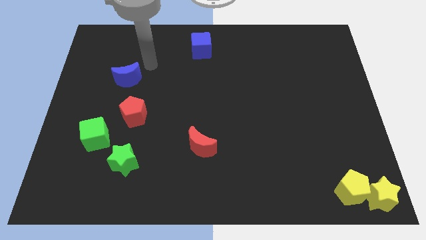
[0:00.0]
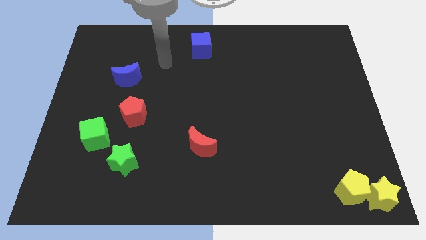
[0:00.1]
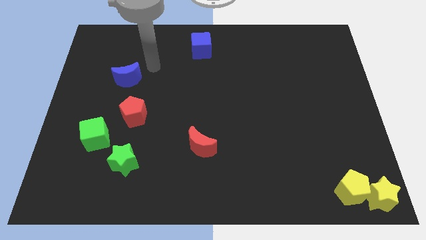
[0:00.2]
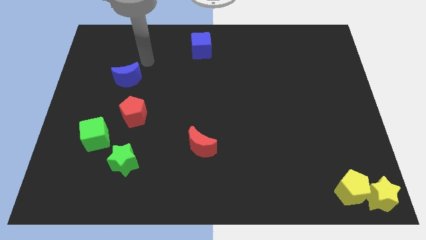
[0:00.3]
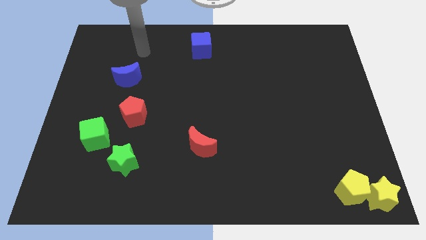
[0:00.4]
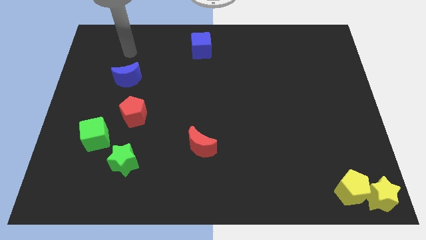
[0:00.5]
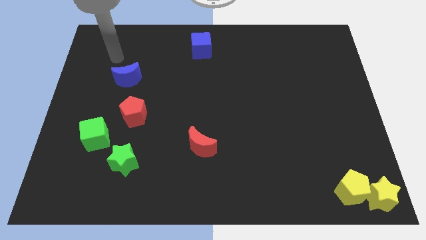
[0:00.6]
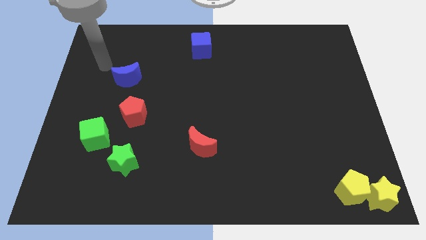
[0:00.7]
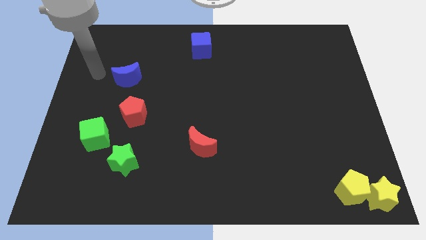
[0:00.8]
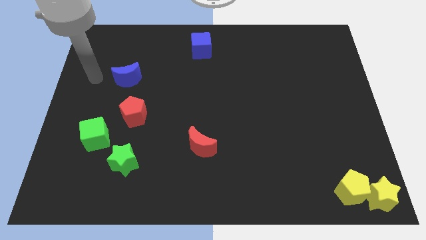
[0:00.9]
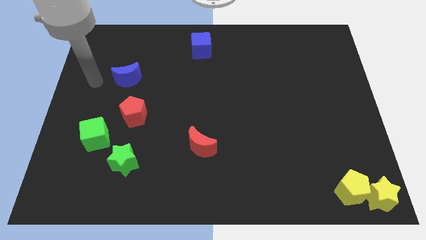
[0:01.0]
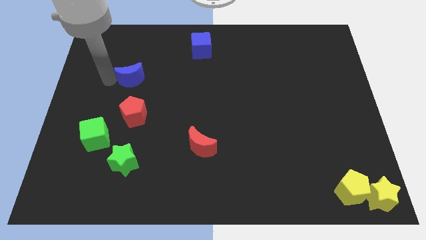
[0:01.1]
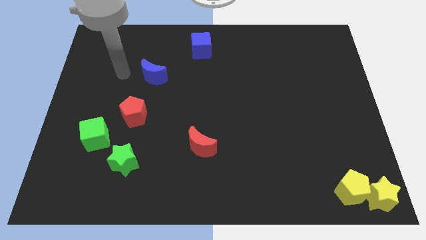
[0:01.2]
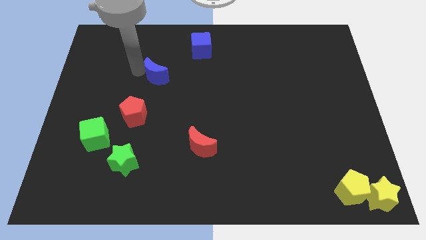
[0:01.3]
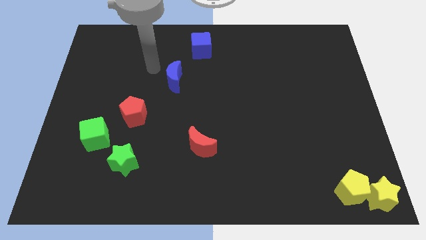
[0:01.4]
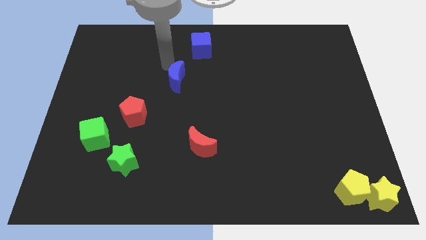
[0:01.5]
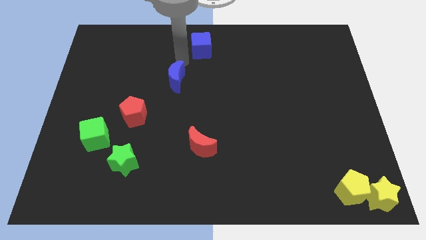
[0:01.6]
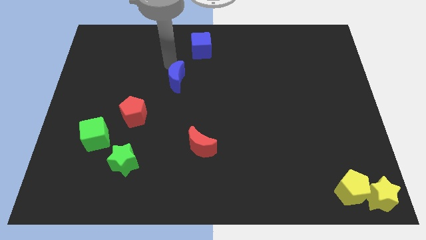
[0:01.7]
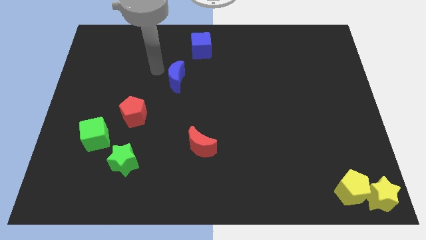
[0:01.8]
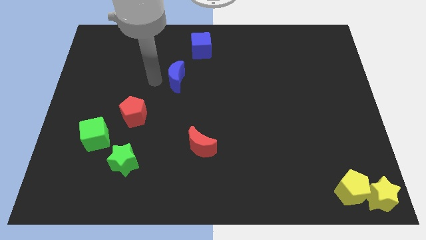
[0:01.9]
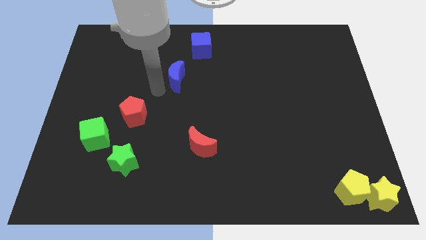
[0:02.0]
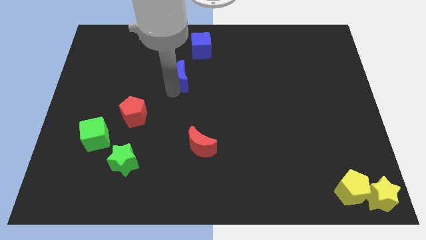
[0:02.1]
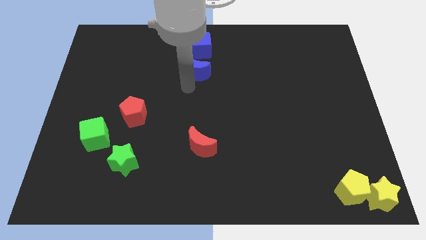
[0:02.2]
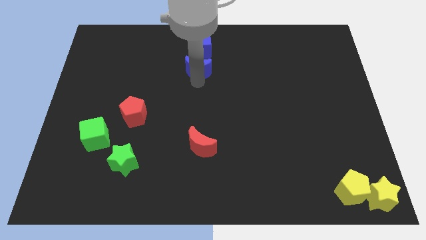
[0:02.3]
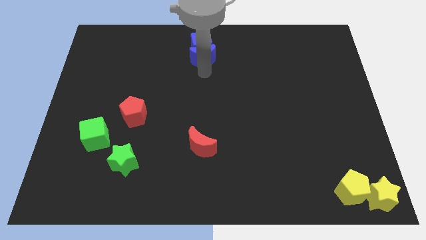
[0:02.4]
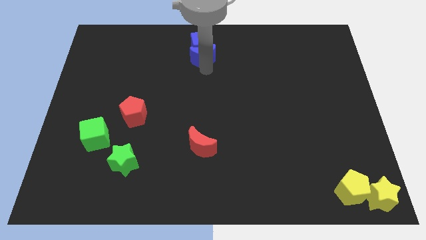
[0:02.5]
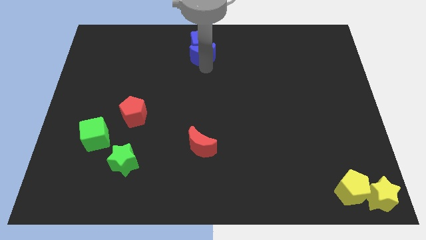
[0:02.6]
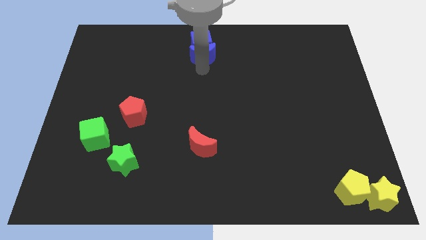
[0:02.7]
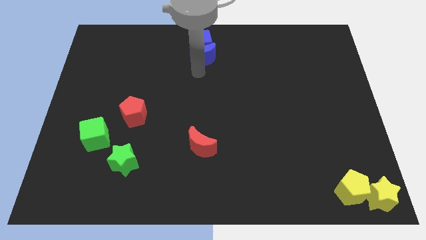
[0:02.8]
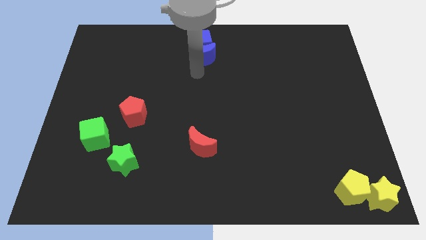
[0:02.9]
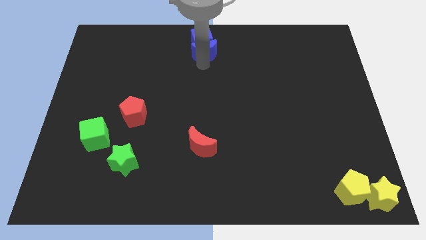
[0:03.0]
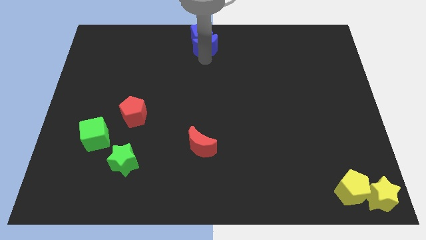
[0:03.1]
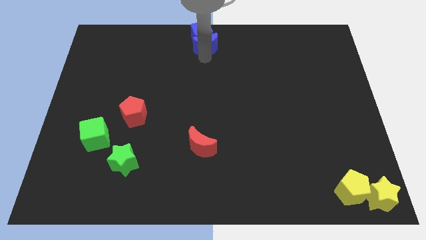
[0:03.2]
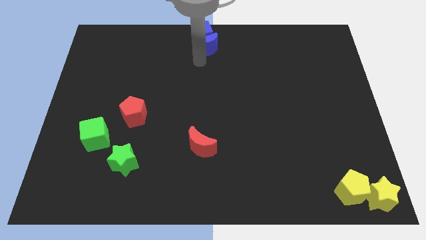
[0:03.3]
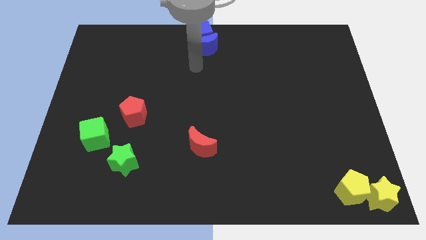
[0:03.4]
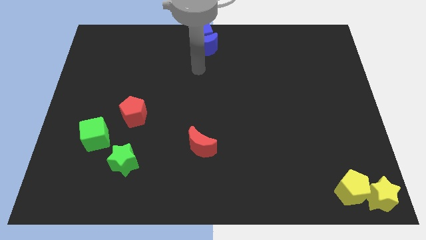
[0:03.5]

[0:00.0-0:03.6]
push the blue block into the blue cube

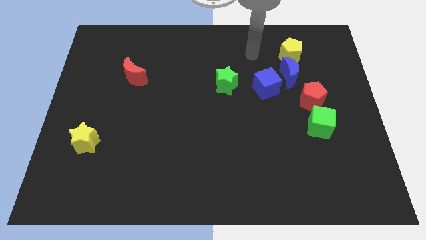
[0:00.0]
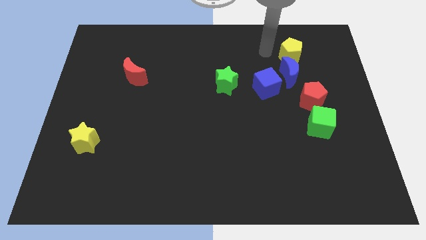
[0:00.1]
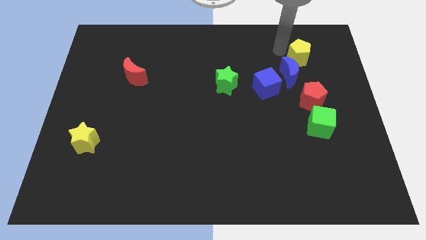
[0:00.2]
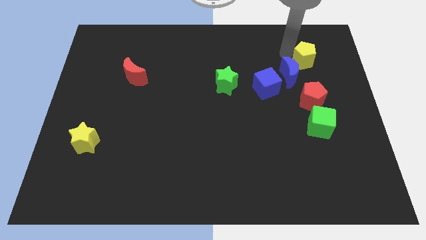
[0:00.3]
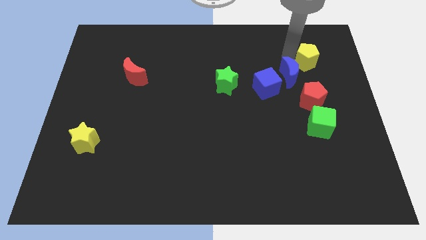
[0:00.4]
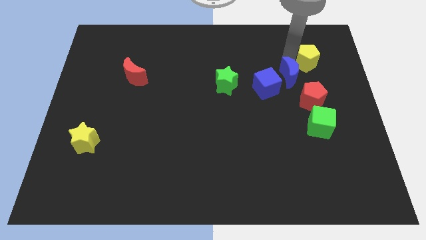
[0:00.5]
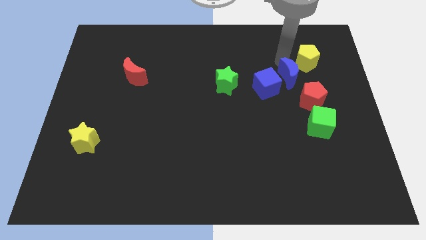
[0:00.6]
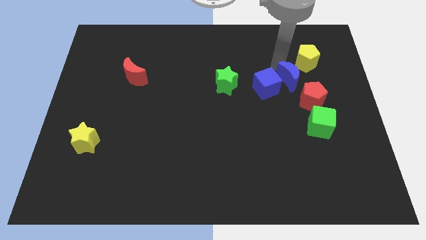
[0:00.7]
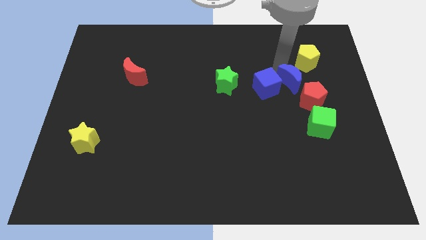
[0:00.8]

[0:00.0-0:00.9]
place yellow pentagon to the top of red pentagon

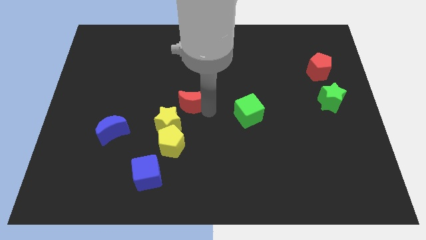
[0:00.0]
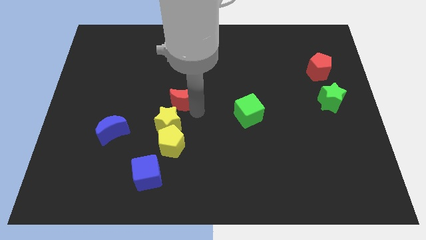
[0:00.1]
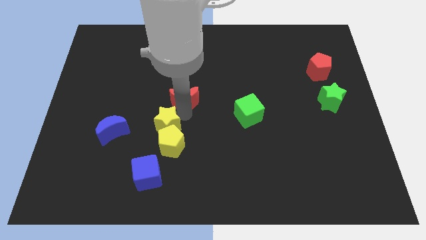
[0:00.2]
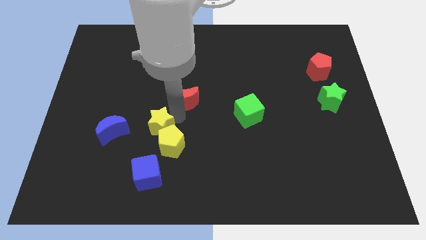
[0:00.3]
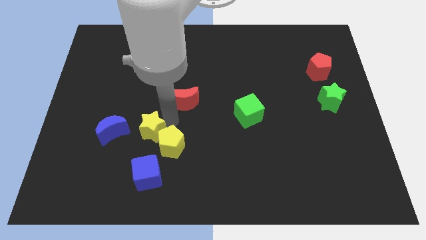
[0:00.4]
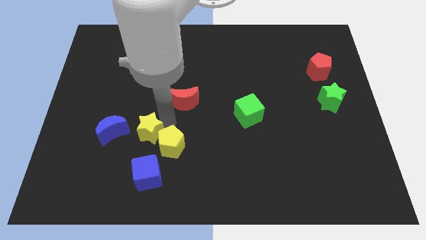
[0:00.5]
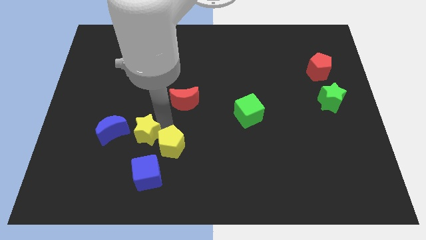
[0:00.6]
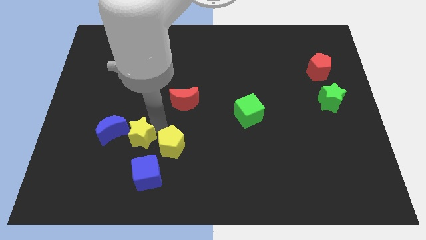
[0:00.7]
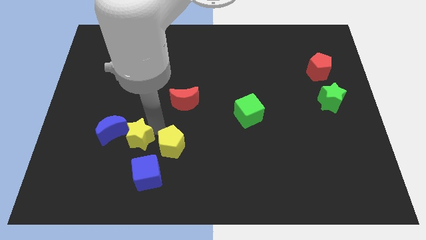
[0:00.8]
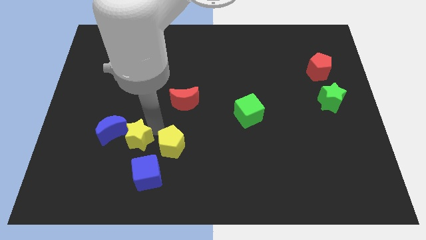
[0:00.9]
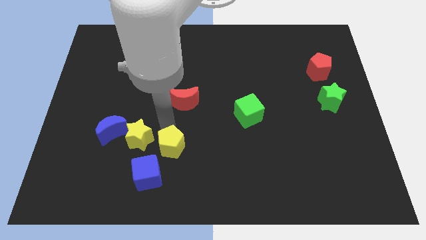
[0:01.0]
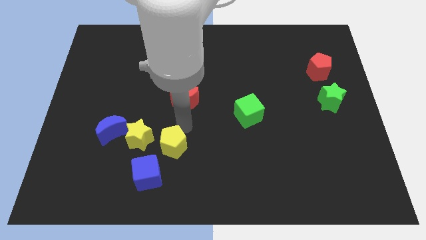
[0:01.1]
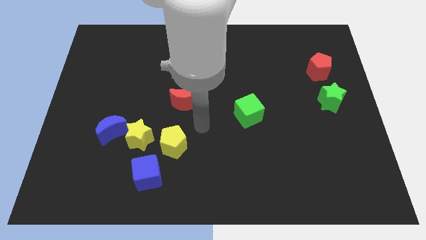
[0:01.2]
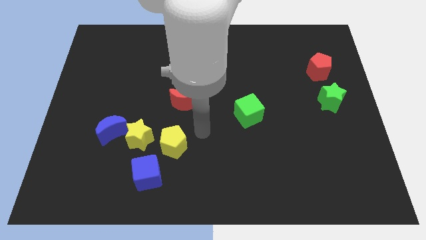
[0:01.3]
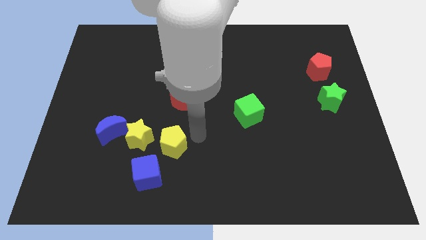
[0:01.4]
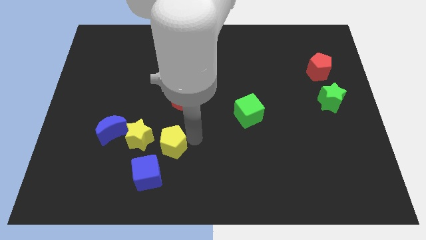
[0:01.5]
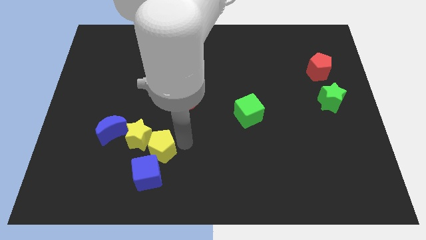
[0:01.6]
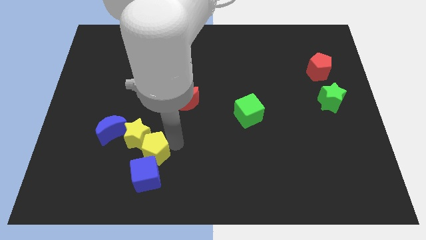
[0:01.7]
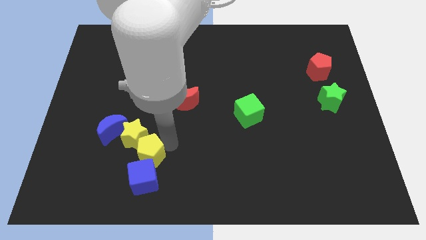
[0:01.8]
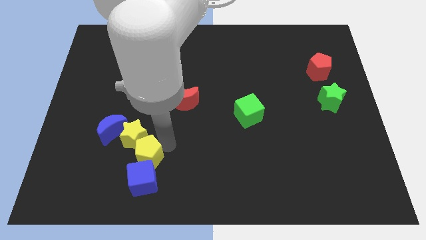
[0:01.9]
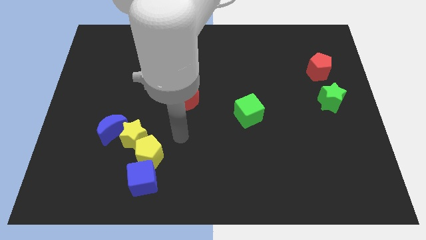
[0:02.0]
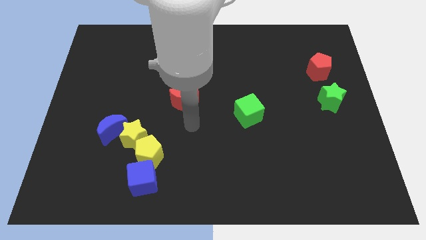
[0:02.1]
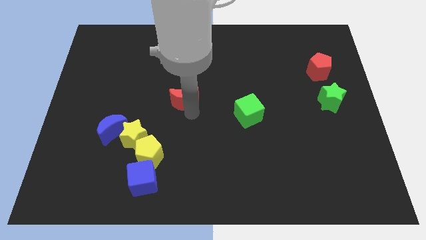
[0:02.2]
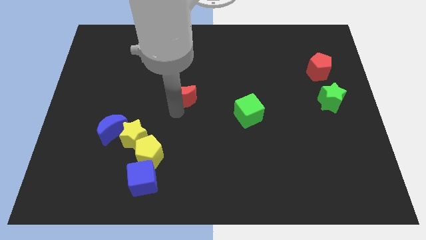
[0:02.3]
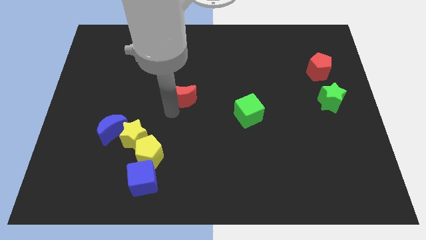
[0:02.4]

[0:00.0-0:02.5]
move the group of yellow blocks to the bottom left

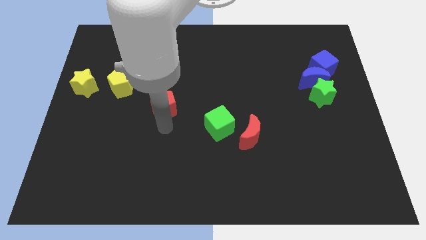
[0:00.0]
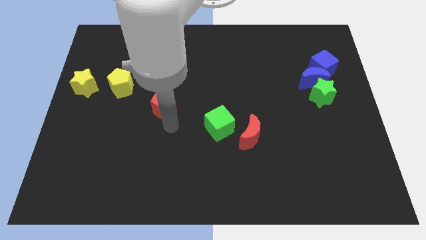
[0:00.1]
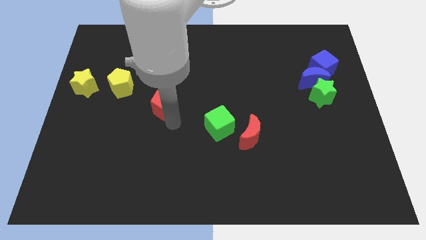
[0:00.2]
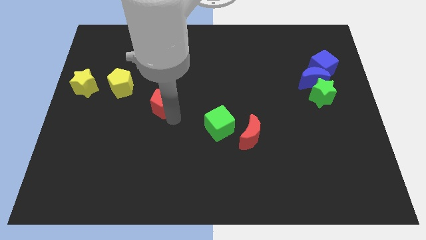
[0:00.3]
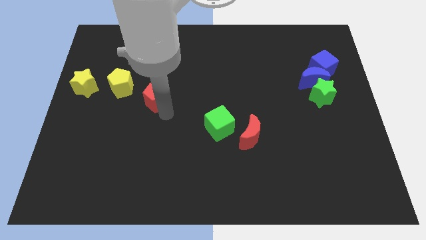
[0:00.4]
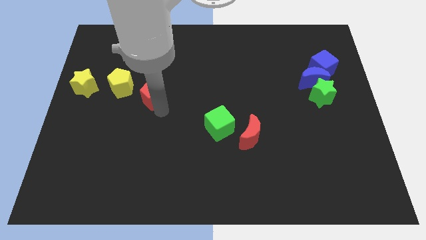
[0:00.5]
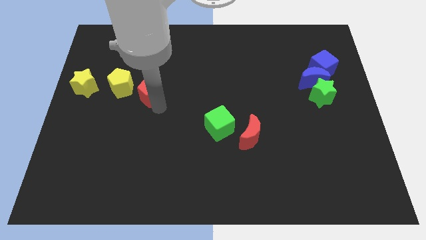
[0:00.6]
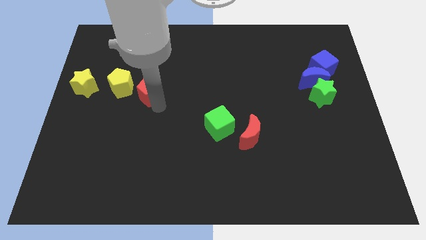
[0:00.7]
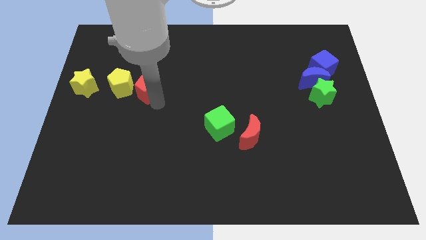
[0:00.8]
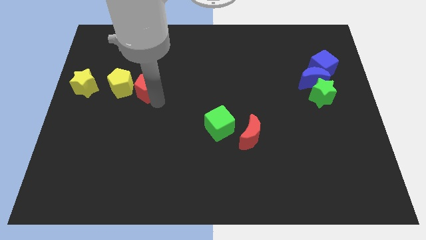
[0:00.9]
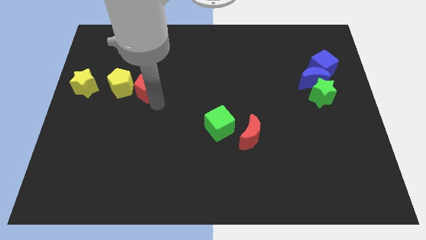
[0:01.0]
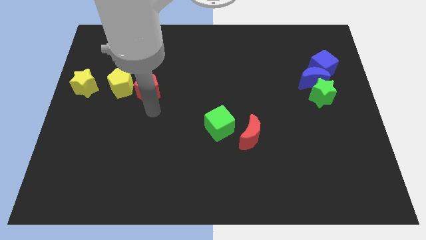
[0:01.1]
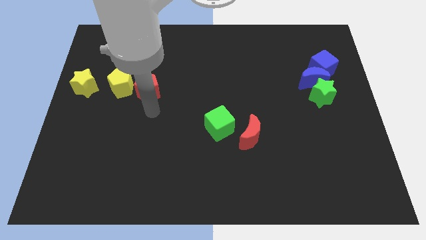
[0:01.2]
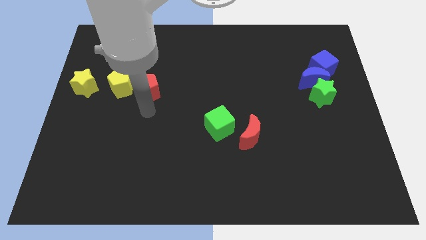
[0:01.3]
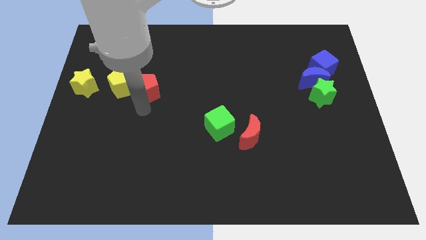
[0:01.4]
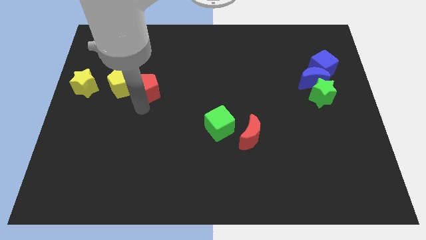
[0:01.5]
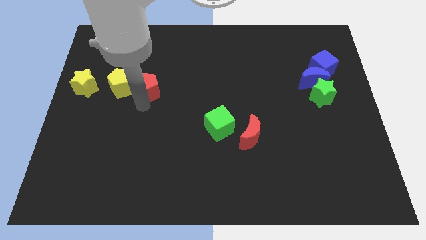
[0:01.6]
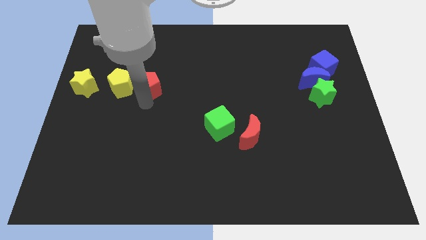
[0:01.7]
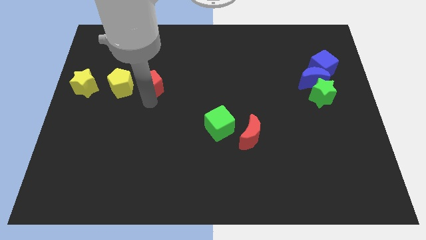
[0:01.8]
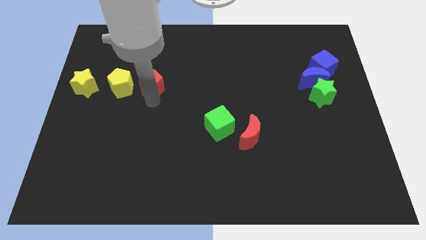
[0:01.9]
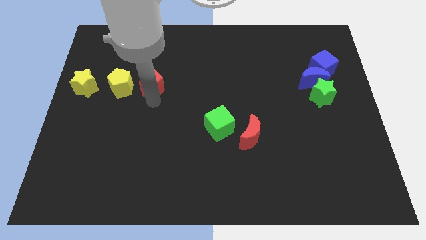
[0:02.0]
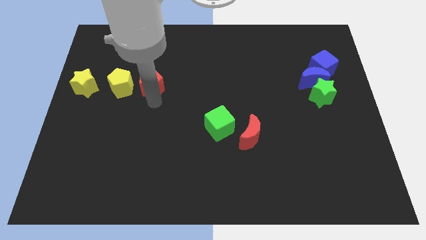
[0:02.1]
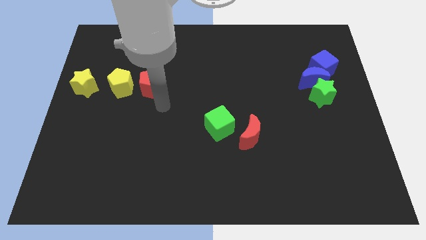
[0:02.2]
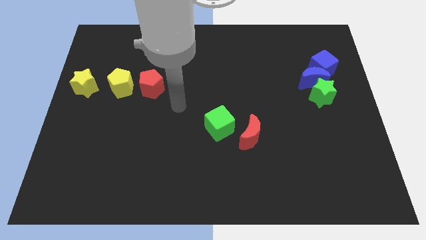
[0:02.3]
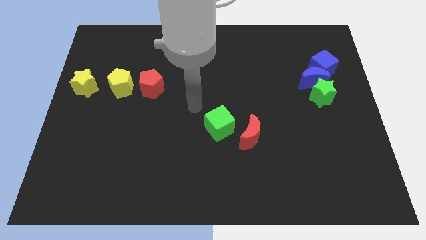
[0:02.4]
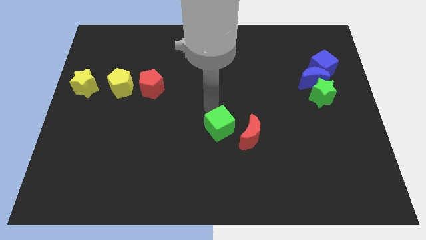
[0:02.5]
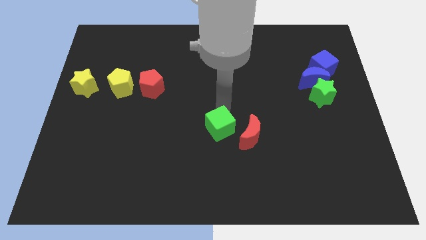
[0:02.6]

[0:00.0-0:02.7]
place your arm above green cube
